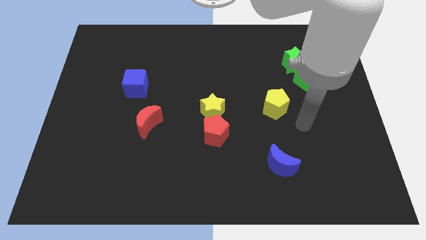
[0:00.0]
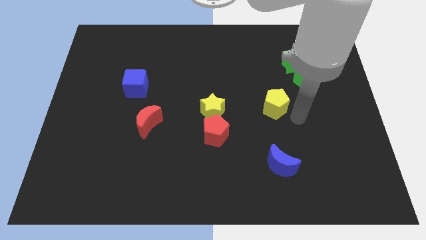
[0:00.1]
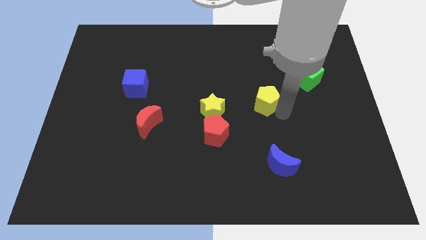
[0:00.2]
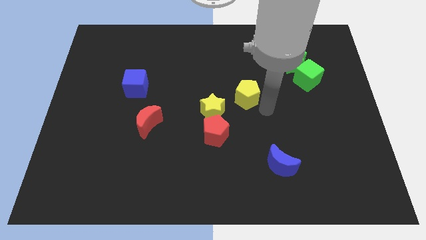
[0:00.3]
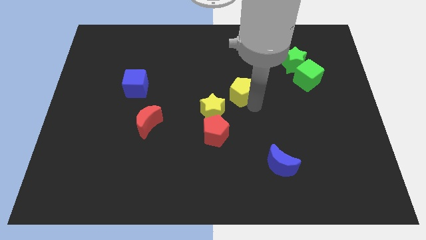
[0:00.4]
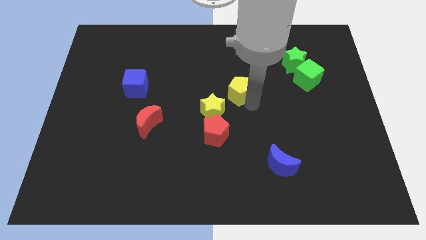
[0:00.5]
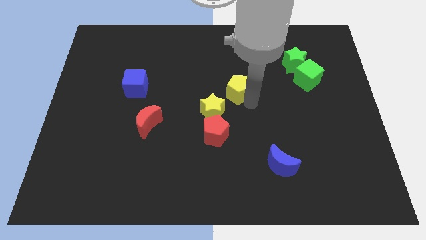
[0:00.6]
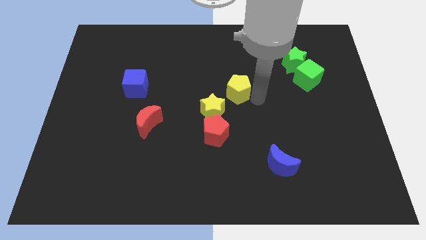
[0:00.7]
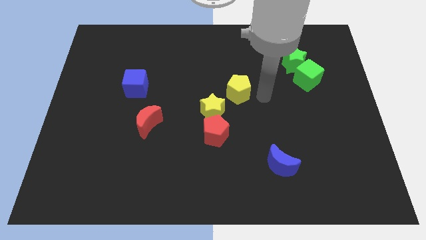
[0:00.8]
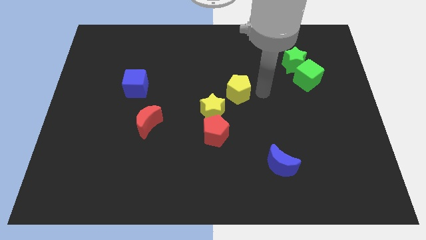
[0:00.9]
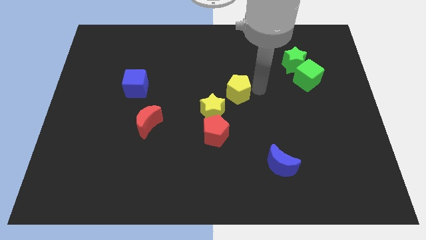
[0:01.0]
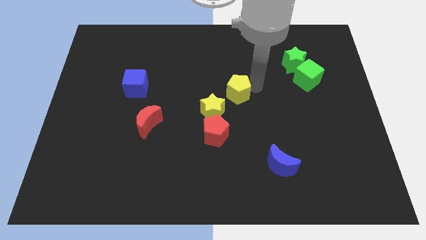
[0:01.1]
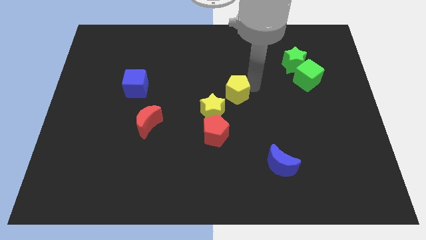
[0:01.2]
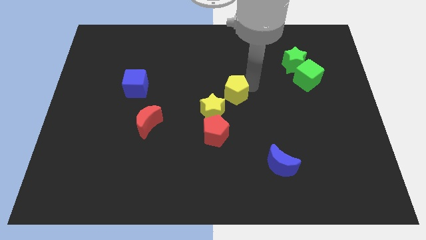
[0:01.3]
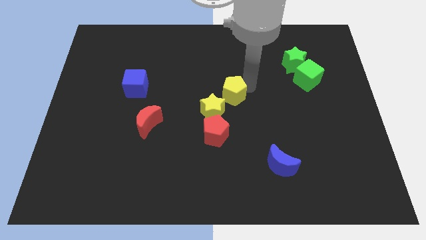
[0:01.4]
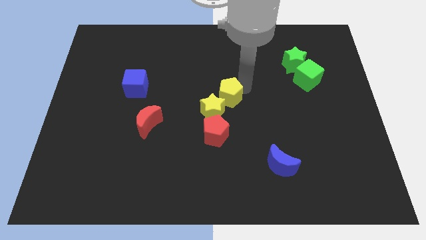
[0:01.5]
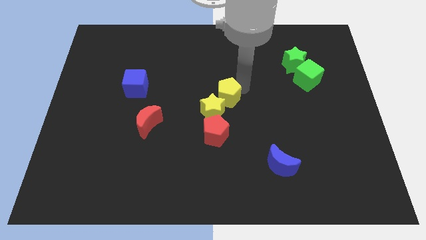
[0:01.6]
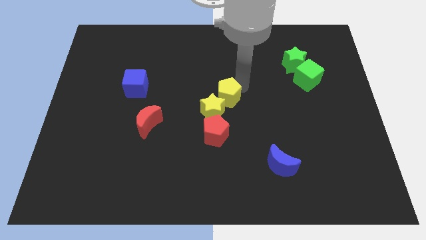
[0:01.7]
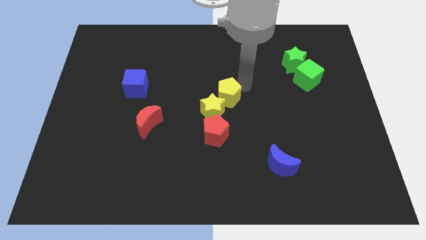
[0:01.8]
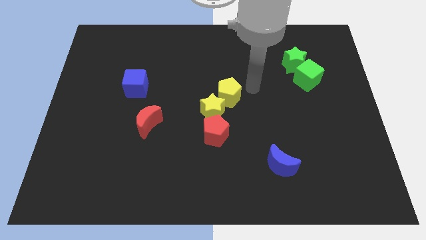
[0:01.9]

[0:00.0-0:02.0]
put the yellow pentagon on the top right side of the yellow star

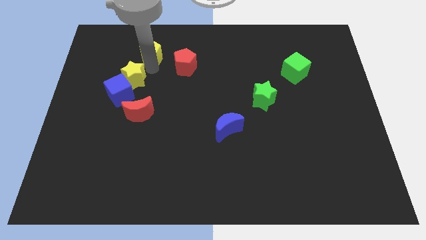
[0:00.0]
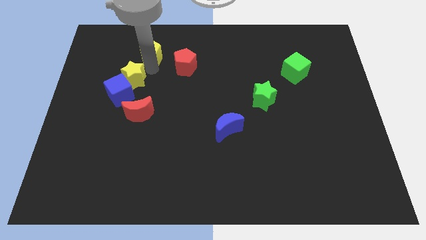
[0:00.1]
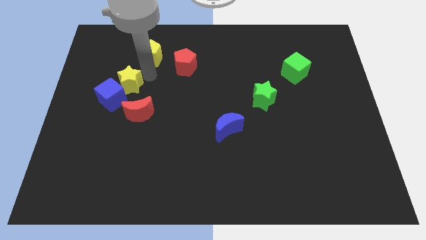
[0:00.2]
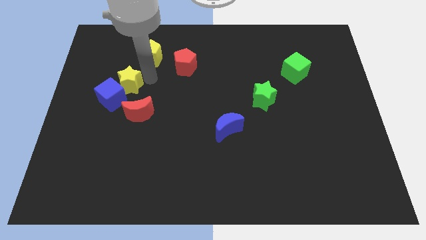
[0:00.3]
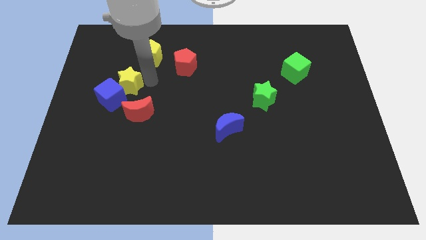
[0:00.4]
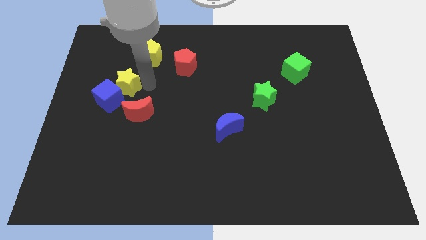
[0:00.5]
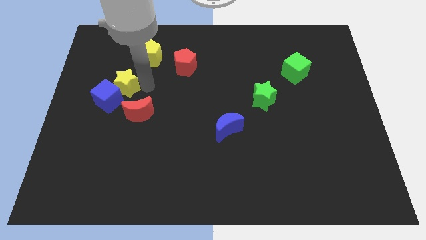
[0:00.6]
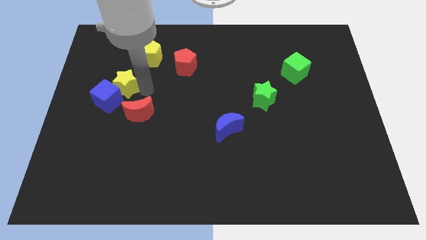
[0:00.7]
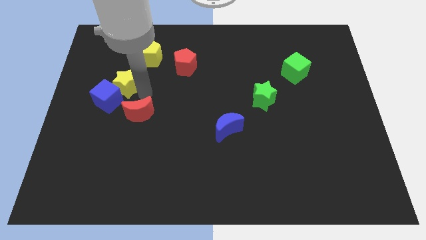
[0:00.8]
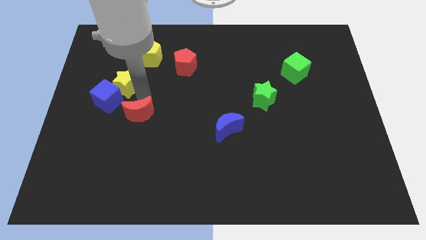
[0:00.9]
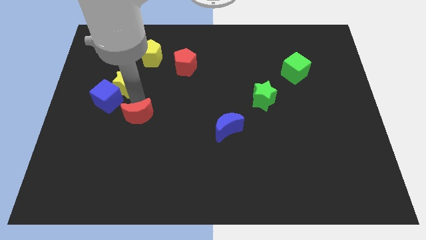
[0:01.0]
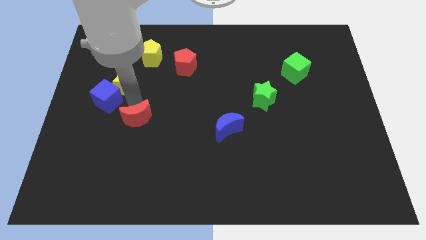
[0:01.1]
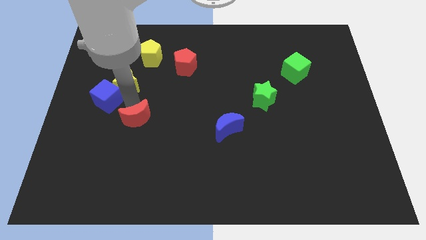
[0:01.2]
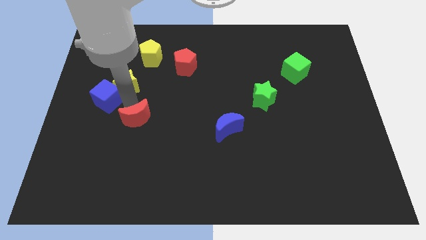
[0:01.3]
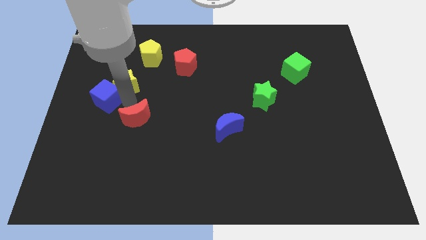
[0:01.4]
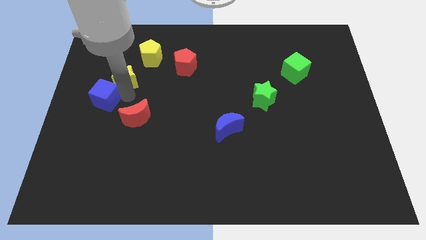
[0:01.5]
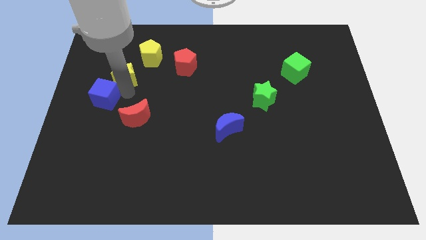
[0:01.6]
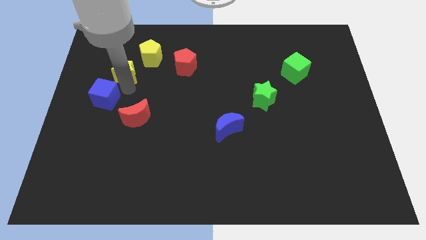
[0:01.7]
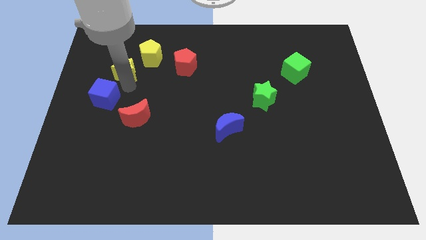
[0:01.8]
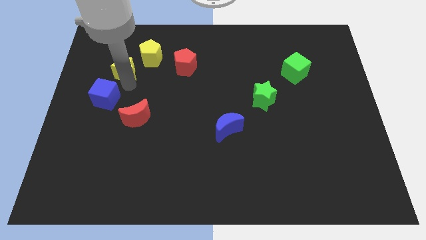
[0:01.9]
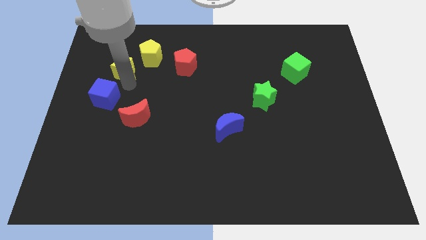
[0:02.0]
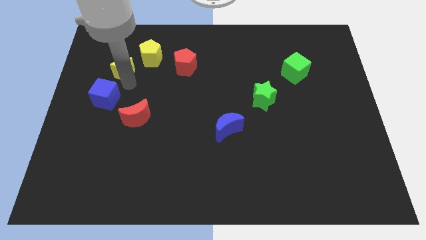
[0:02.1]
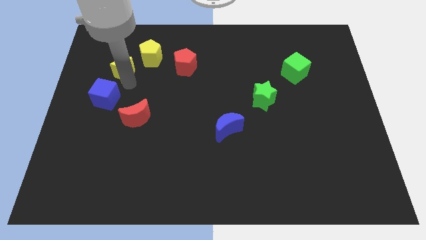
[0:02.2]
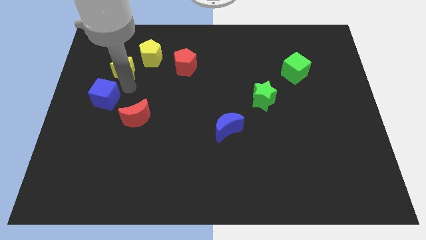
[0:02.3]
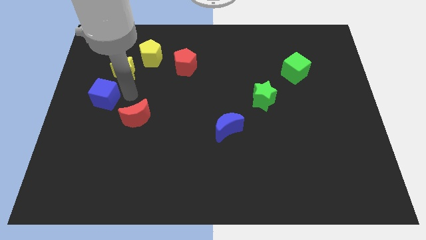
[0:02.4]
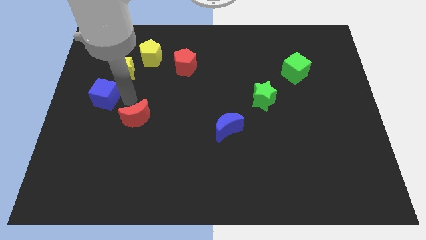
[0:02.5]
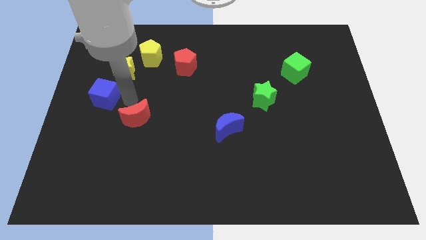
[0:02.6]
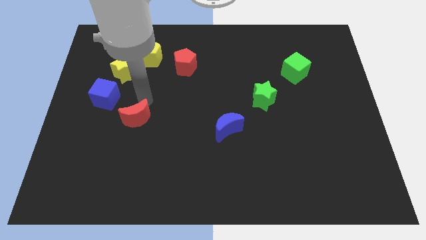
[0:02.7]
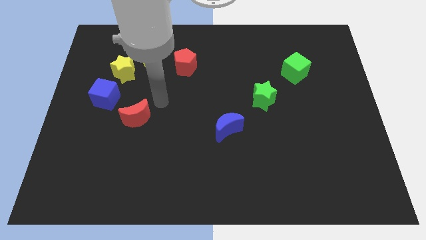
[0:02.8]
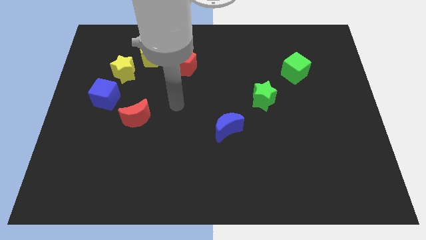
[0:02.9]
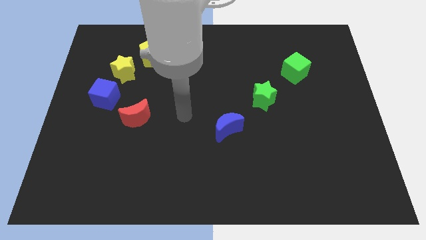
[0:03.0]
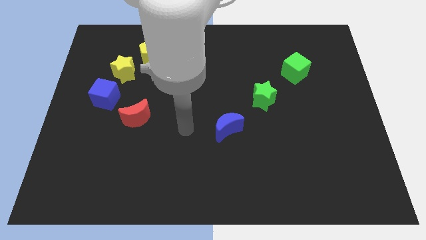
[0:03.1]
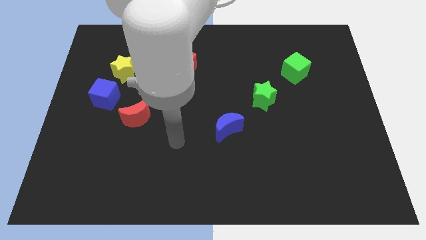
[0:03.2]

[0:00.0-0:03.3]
move the yellow star and the red moon away from the blue cube

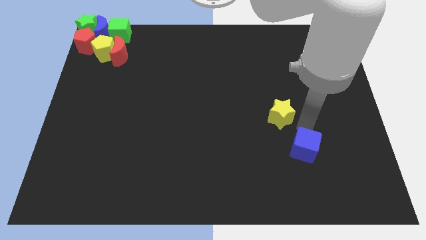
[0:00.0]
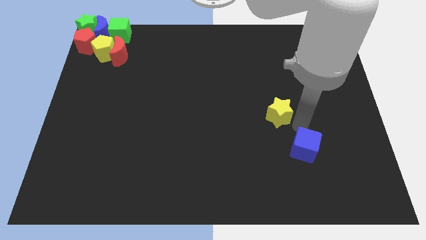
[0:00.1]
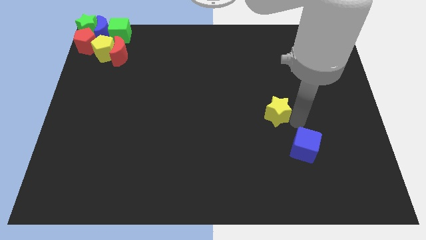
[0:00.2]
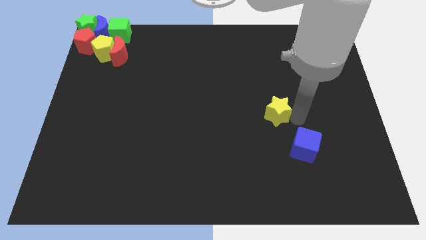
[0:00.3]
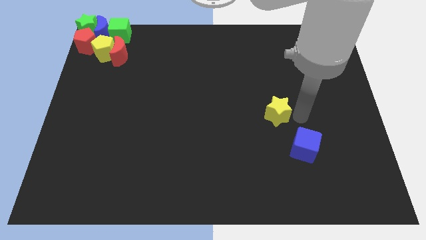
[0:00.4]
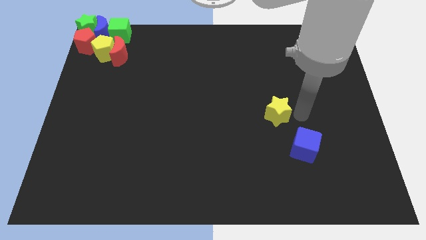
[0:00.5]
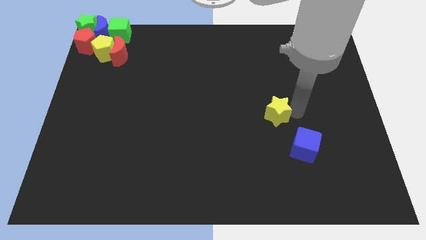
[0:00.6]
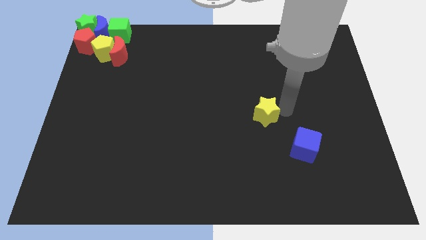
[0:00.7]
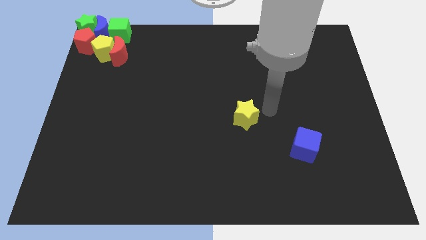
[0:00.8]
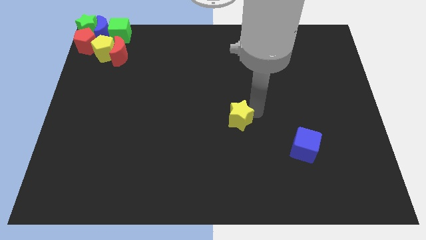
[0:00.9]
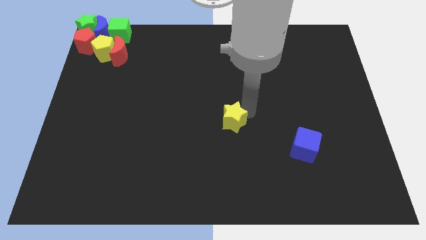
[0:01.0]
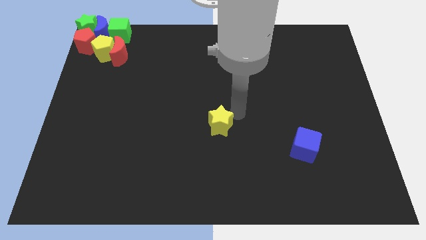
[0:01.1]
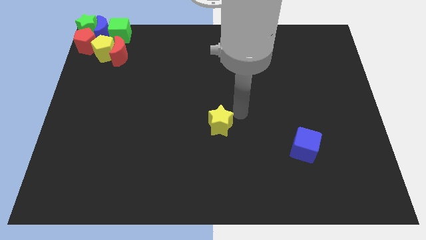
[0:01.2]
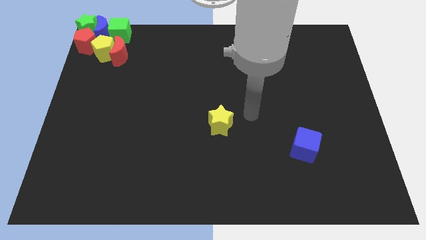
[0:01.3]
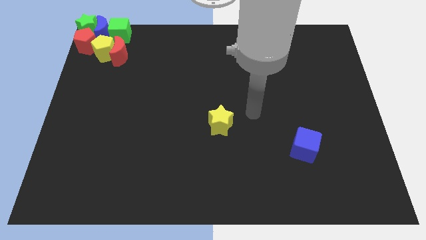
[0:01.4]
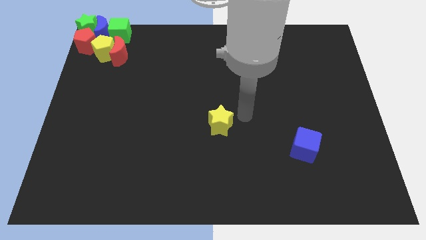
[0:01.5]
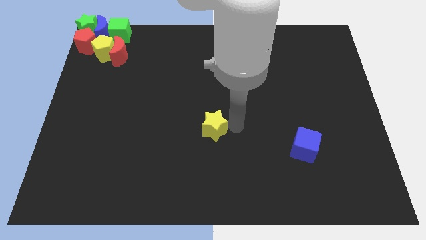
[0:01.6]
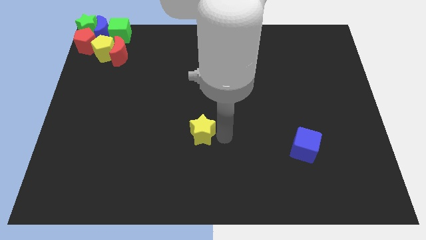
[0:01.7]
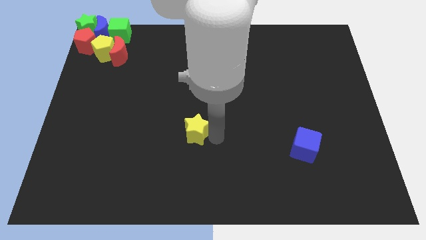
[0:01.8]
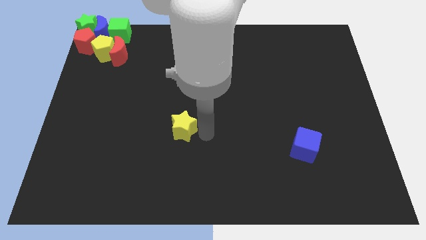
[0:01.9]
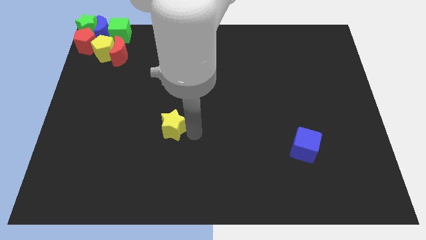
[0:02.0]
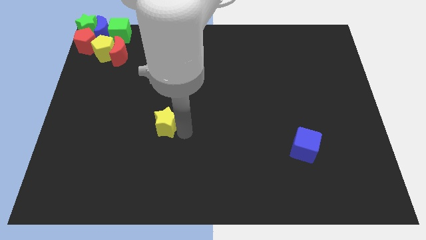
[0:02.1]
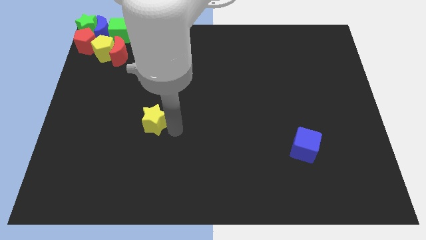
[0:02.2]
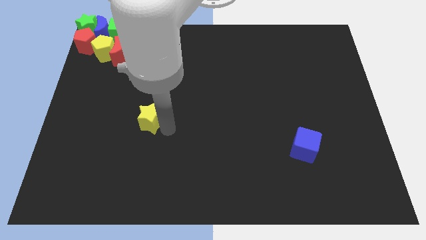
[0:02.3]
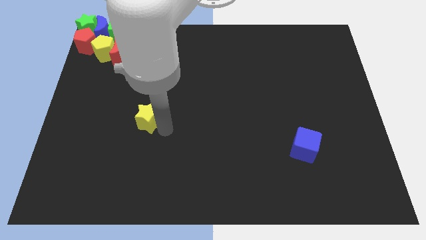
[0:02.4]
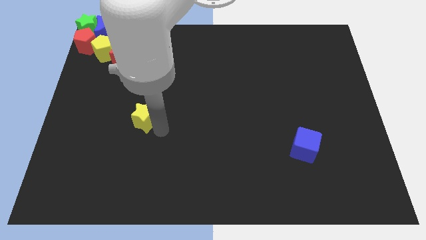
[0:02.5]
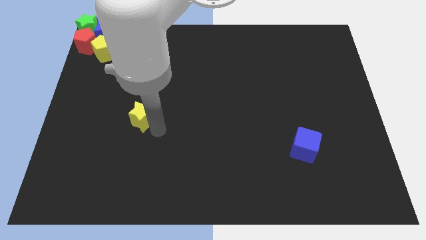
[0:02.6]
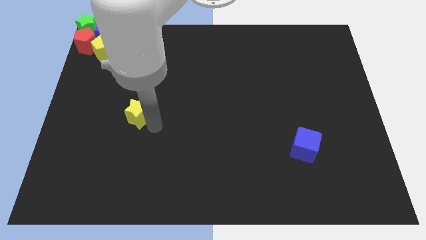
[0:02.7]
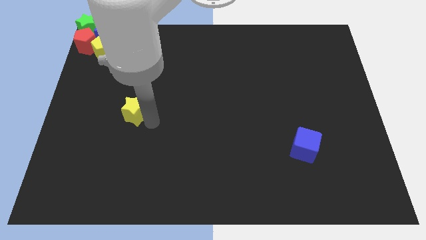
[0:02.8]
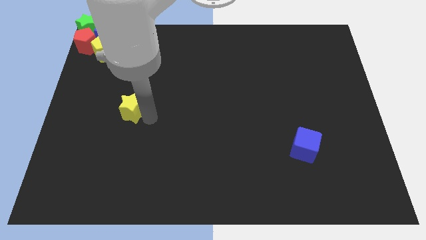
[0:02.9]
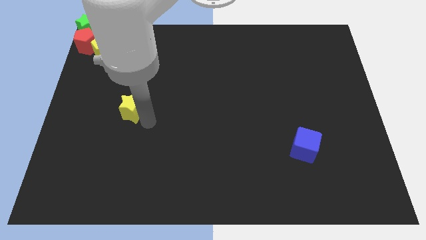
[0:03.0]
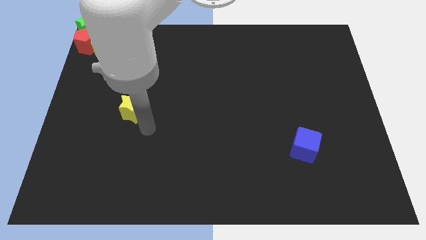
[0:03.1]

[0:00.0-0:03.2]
place the yellow star below the red moon

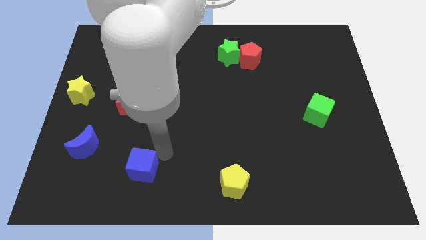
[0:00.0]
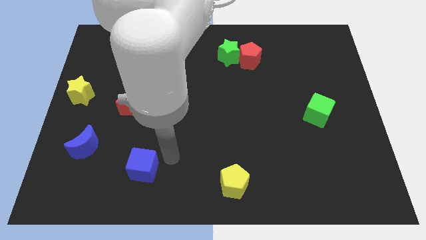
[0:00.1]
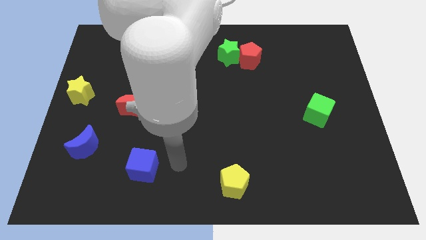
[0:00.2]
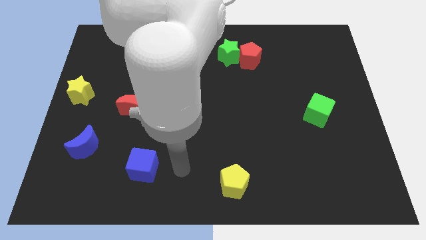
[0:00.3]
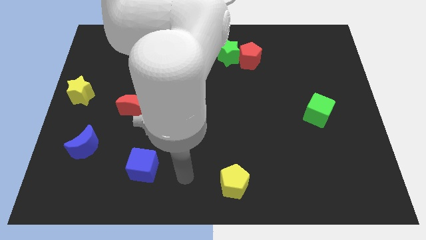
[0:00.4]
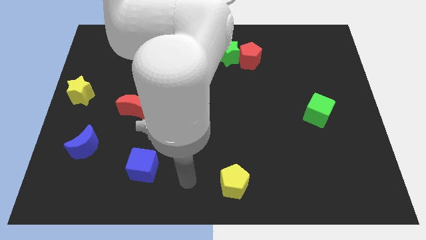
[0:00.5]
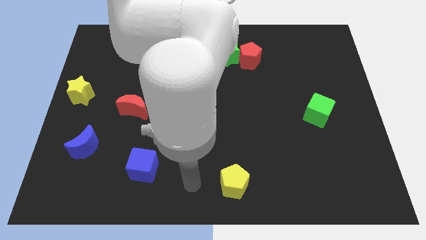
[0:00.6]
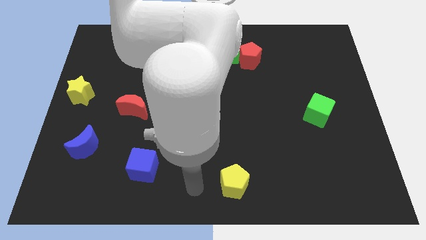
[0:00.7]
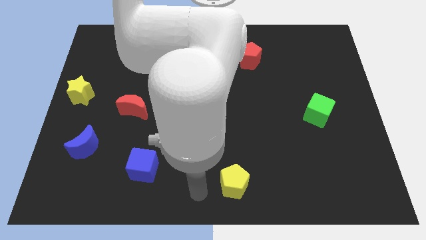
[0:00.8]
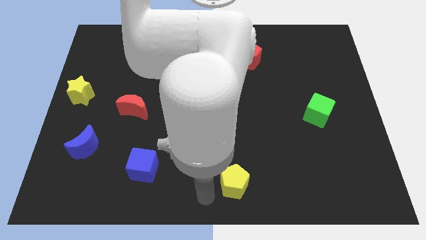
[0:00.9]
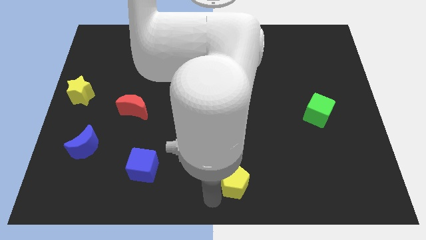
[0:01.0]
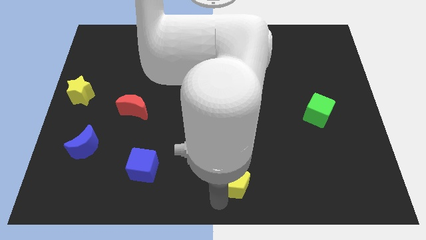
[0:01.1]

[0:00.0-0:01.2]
move your arm to the bottom left side of the yellow pentagon
